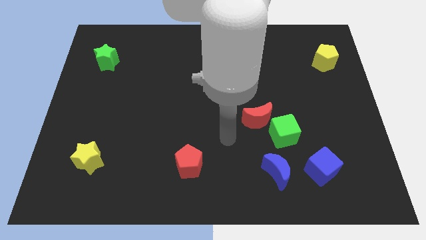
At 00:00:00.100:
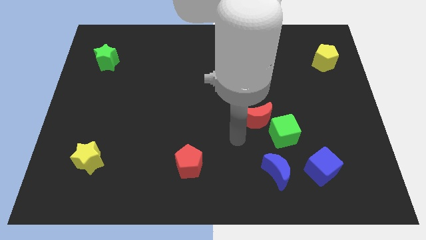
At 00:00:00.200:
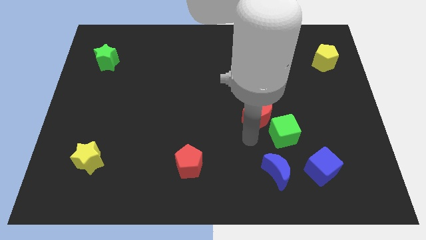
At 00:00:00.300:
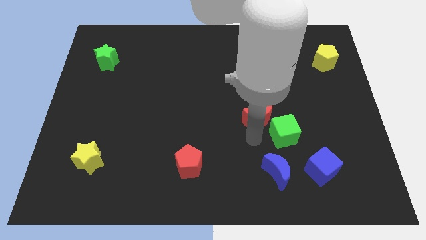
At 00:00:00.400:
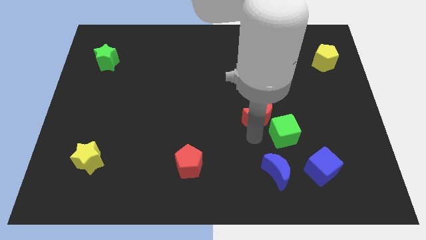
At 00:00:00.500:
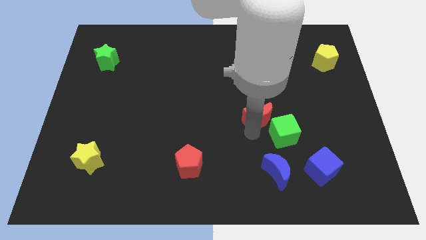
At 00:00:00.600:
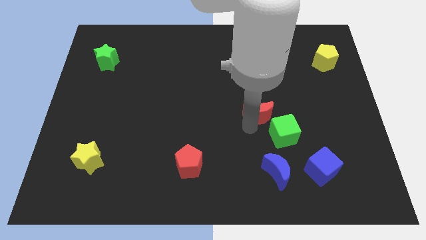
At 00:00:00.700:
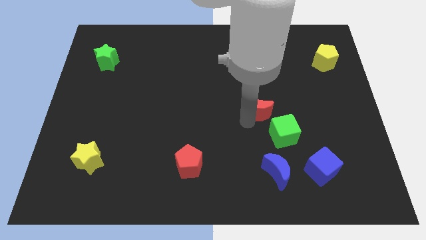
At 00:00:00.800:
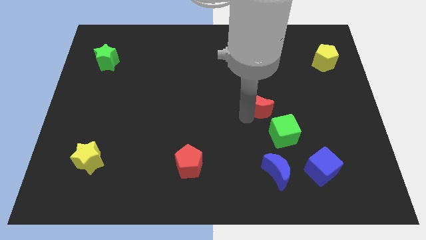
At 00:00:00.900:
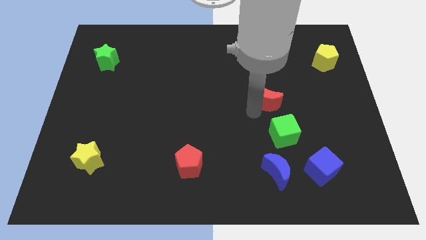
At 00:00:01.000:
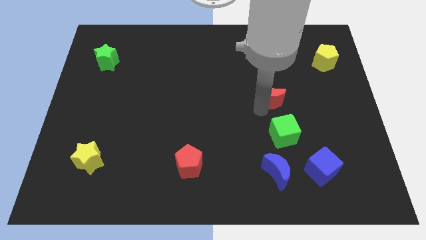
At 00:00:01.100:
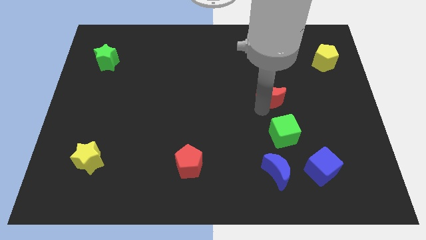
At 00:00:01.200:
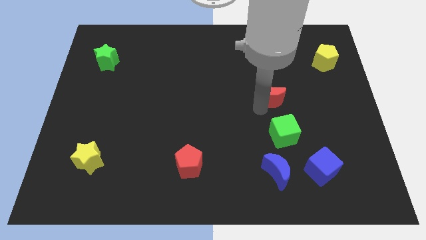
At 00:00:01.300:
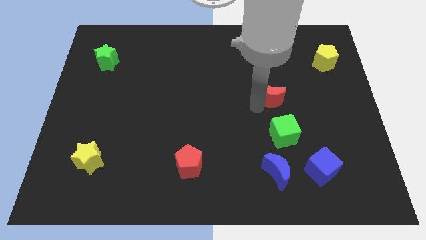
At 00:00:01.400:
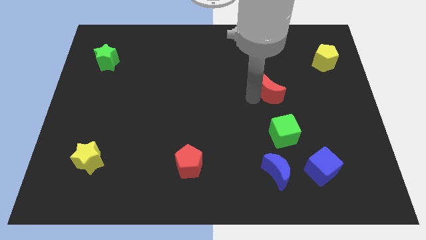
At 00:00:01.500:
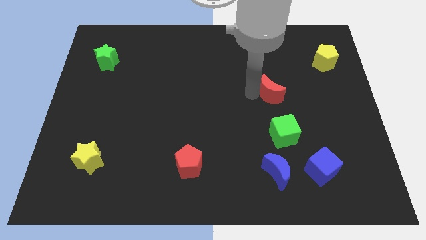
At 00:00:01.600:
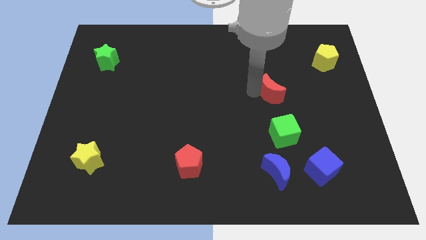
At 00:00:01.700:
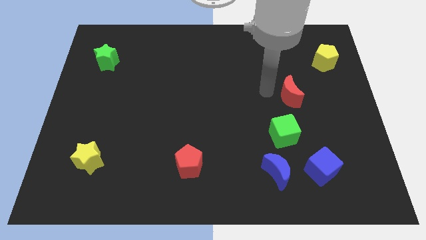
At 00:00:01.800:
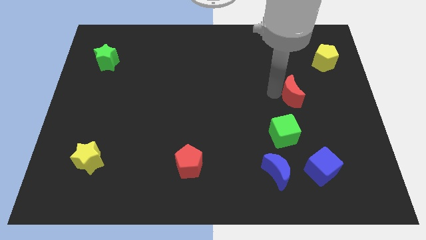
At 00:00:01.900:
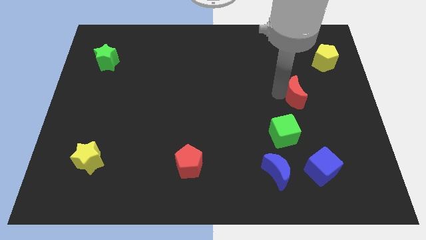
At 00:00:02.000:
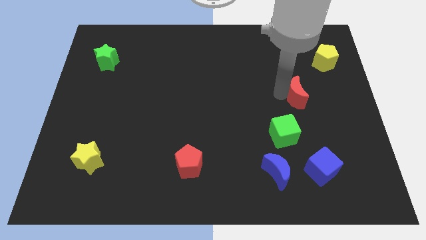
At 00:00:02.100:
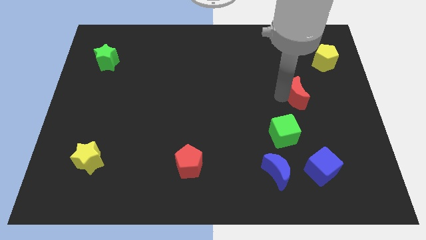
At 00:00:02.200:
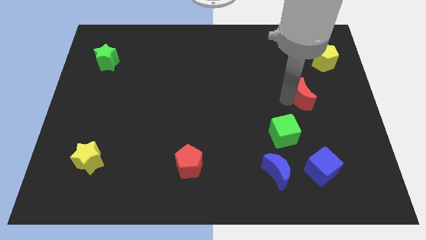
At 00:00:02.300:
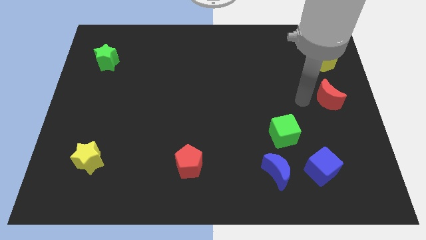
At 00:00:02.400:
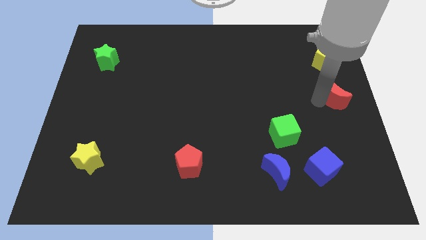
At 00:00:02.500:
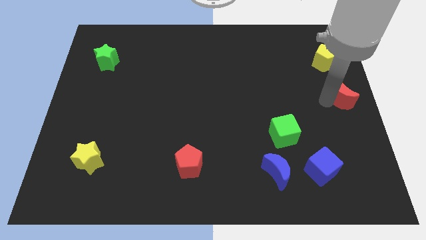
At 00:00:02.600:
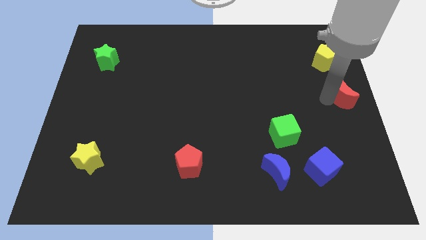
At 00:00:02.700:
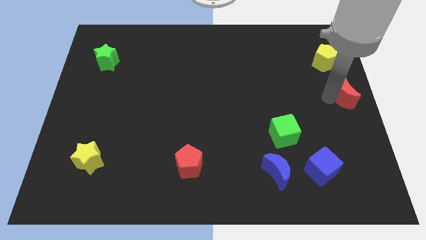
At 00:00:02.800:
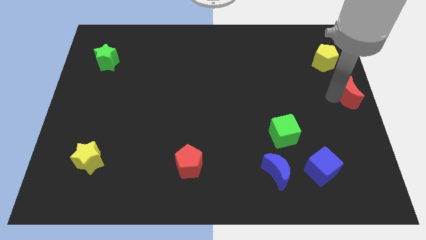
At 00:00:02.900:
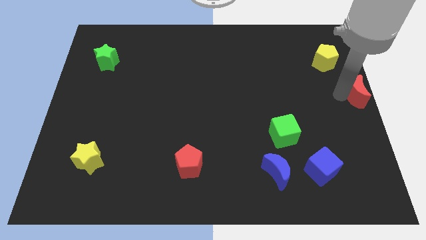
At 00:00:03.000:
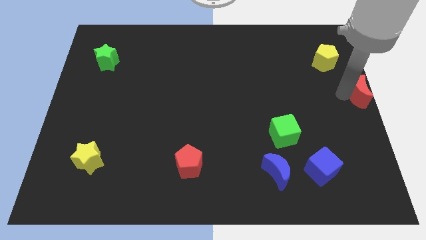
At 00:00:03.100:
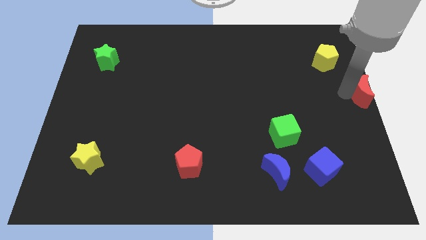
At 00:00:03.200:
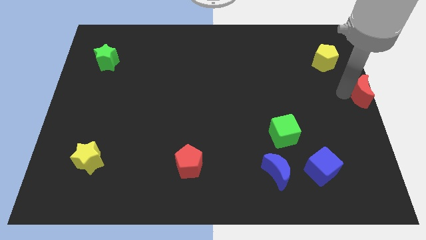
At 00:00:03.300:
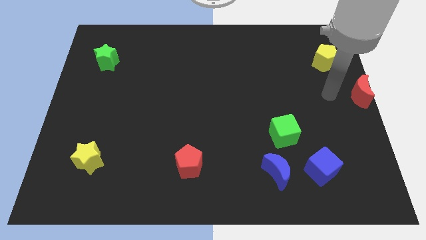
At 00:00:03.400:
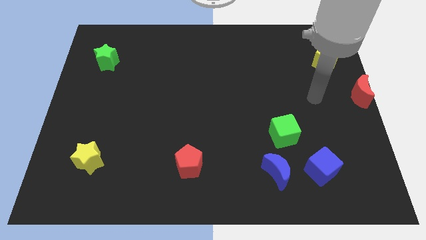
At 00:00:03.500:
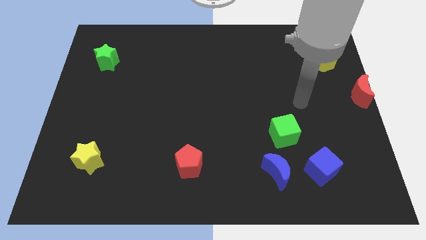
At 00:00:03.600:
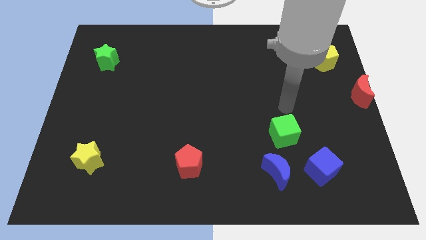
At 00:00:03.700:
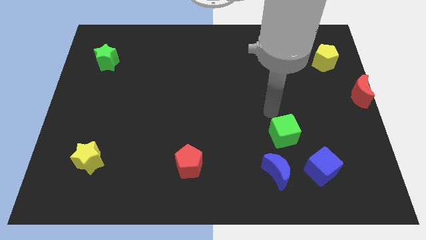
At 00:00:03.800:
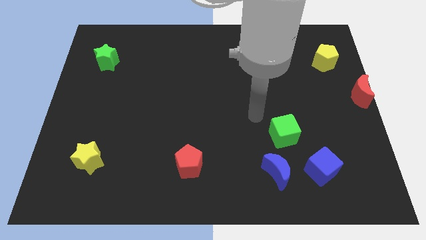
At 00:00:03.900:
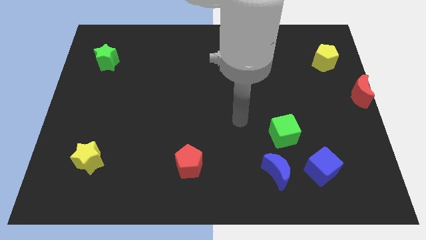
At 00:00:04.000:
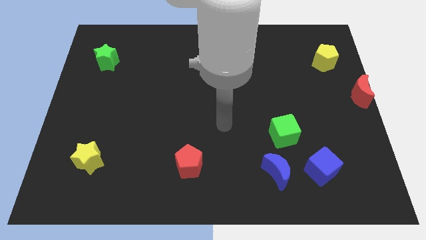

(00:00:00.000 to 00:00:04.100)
push the red moon away from the green cube towards the center right

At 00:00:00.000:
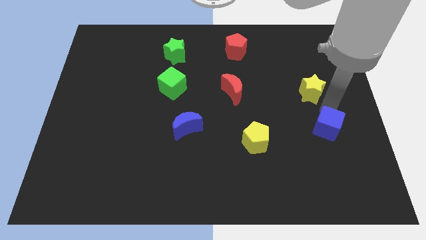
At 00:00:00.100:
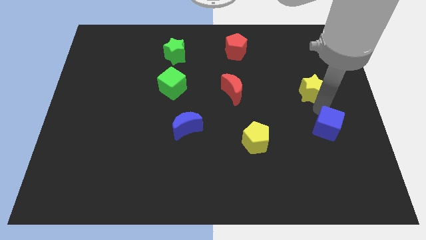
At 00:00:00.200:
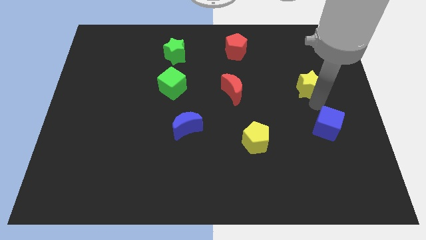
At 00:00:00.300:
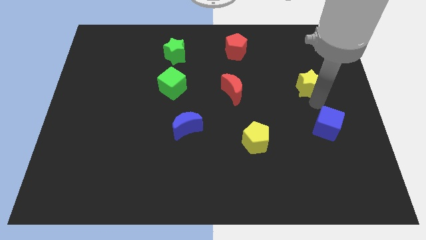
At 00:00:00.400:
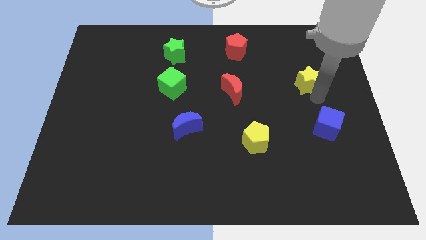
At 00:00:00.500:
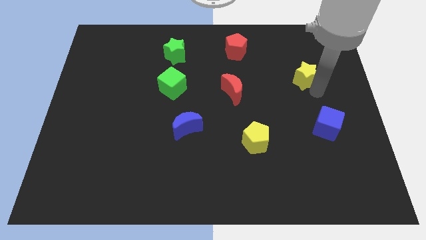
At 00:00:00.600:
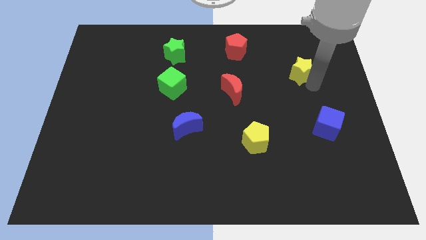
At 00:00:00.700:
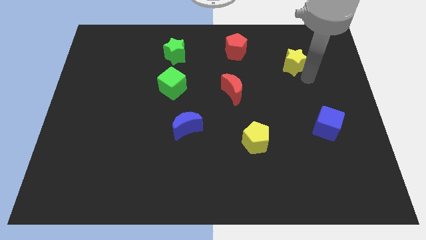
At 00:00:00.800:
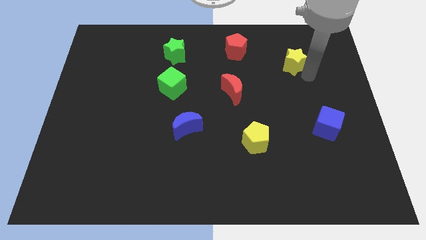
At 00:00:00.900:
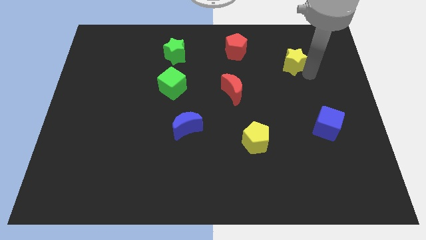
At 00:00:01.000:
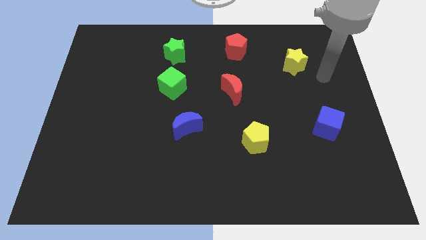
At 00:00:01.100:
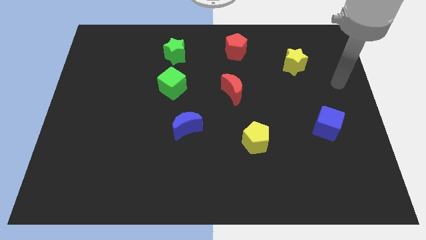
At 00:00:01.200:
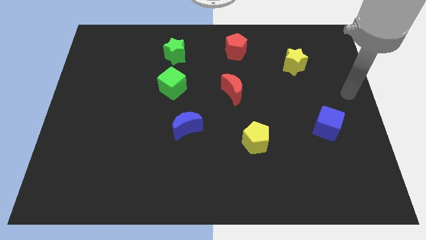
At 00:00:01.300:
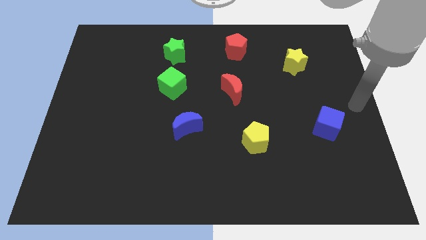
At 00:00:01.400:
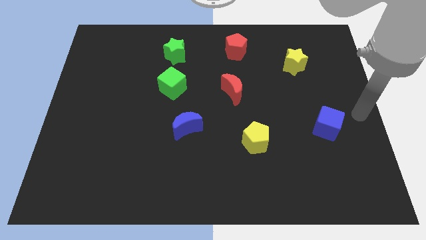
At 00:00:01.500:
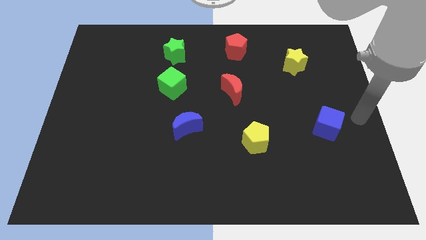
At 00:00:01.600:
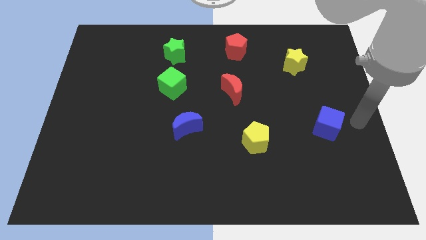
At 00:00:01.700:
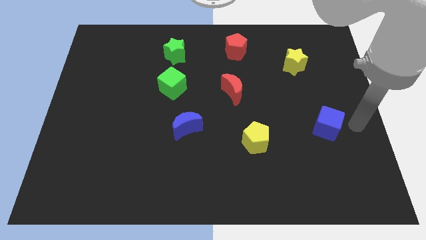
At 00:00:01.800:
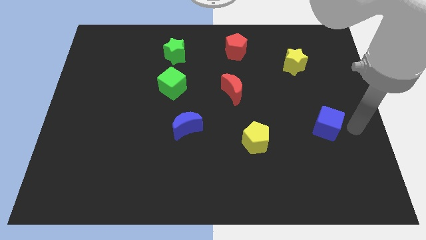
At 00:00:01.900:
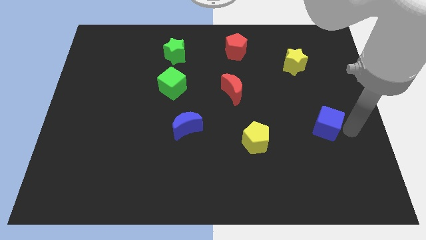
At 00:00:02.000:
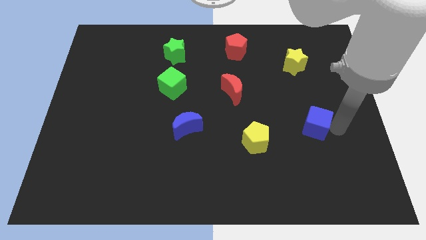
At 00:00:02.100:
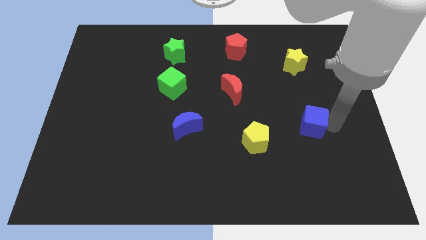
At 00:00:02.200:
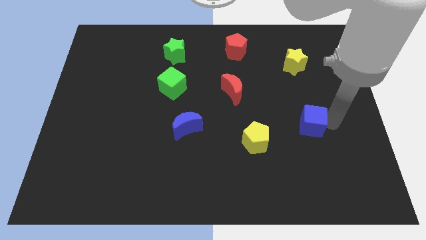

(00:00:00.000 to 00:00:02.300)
place the yellow star right to the red moon

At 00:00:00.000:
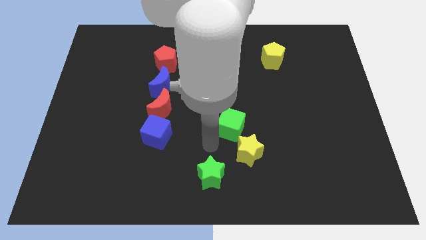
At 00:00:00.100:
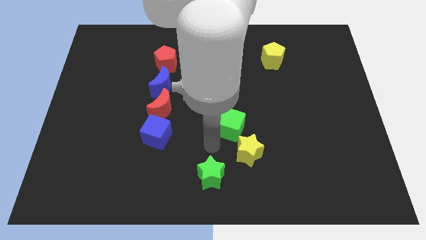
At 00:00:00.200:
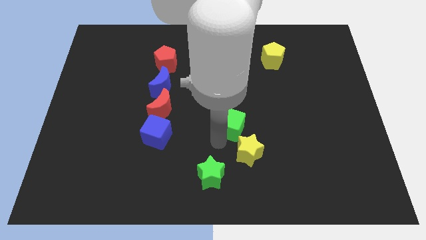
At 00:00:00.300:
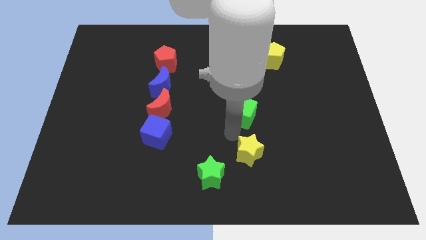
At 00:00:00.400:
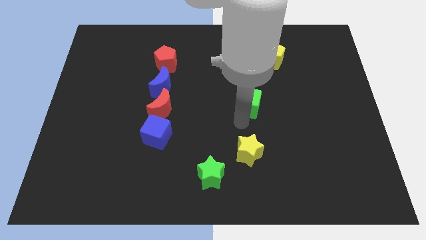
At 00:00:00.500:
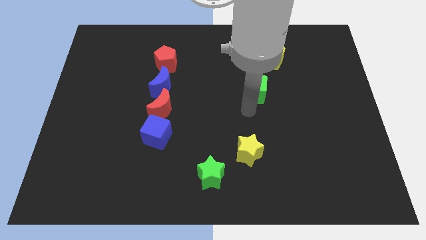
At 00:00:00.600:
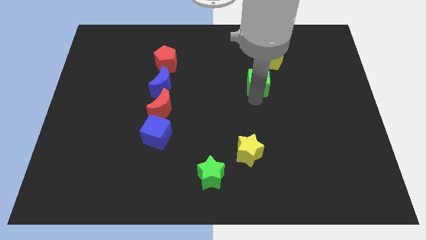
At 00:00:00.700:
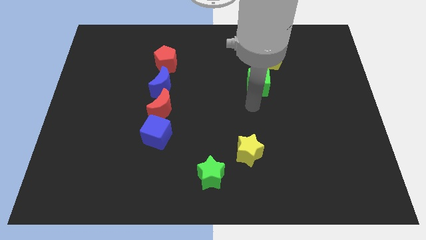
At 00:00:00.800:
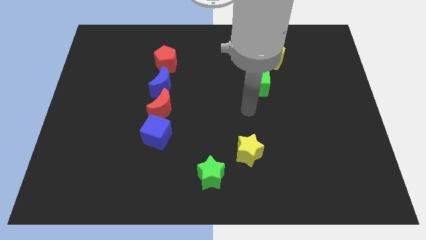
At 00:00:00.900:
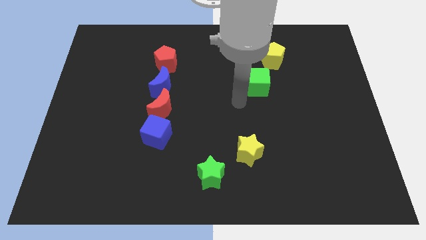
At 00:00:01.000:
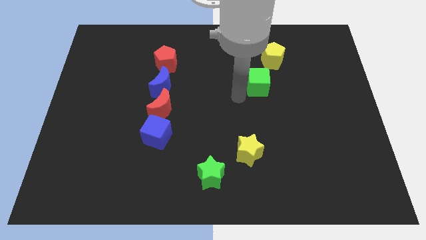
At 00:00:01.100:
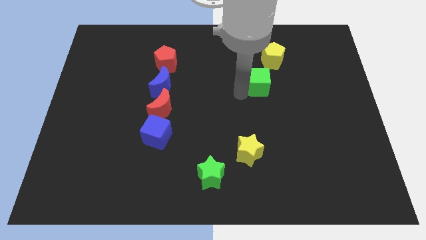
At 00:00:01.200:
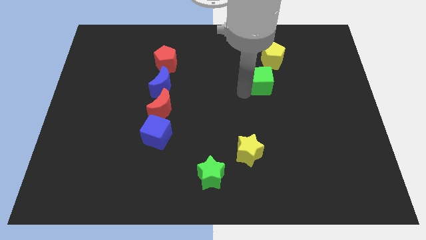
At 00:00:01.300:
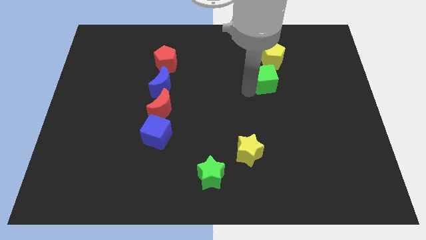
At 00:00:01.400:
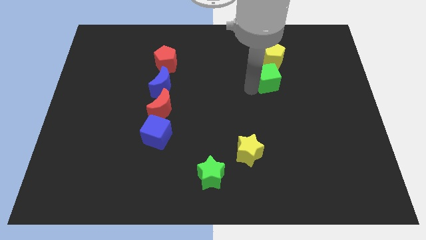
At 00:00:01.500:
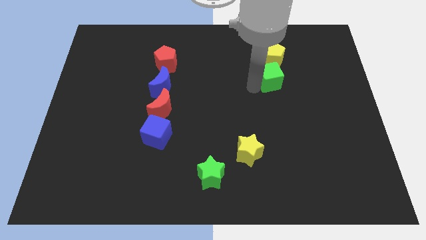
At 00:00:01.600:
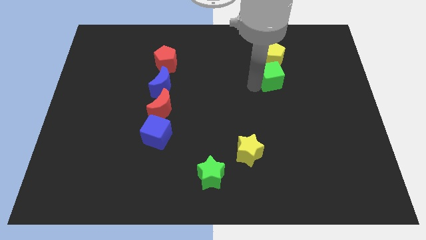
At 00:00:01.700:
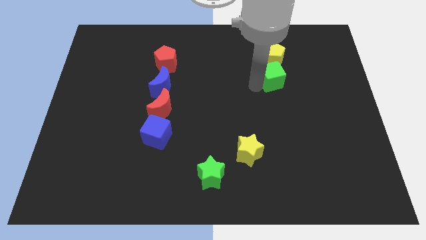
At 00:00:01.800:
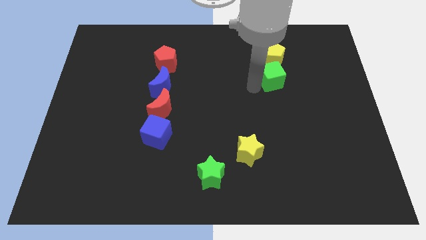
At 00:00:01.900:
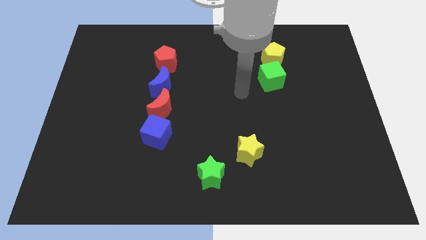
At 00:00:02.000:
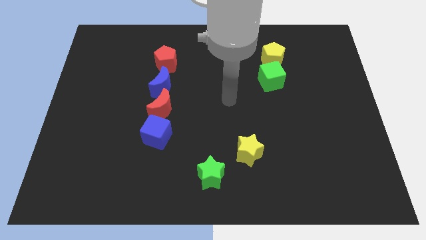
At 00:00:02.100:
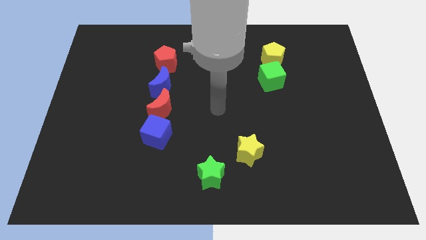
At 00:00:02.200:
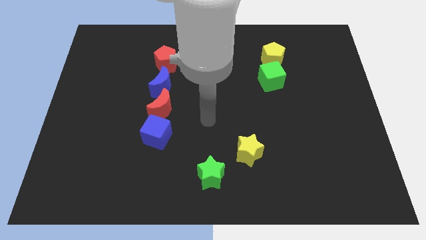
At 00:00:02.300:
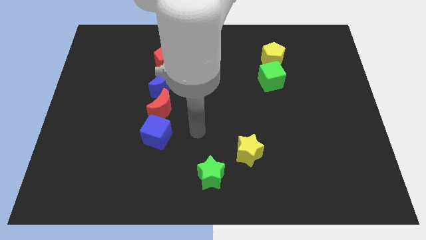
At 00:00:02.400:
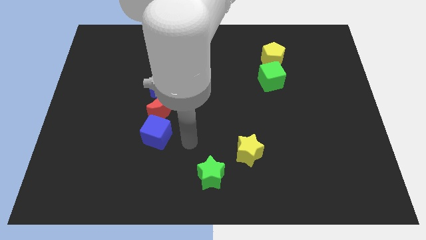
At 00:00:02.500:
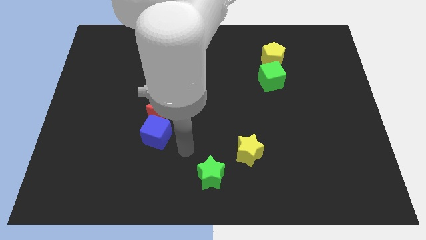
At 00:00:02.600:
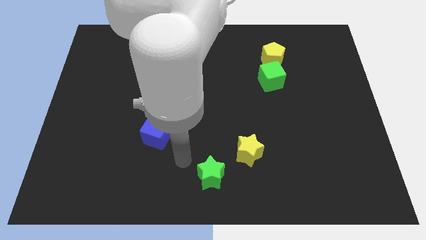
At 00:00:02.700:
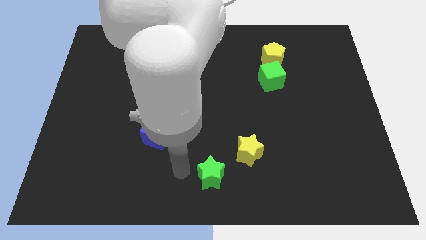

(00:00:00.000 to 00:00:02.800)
push the green cube towards the yellow pentagon
